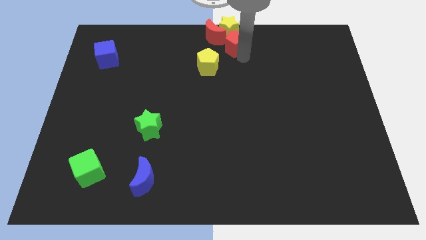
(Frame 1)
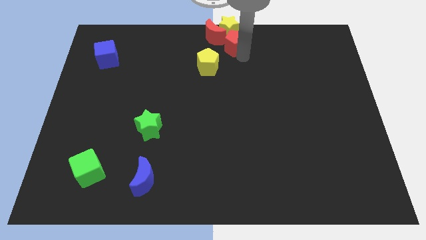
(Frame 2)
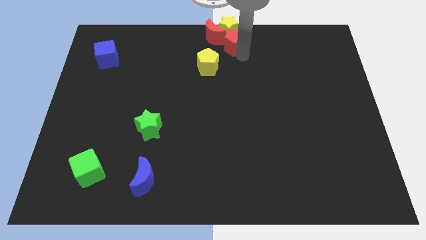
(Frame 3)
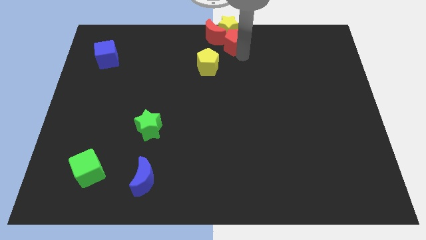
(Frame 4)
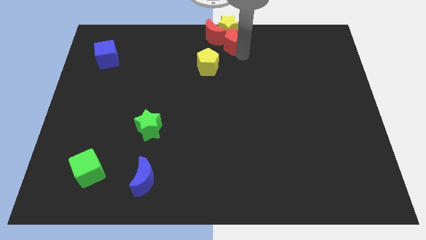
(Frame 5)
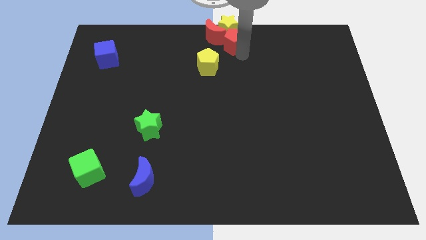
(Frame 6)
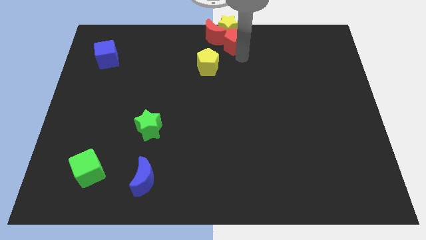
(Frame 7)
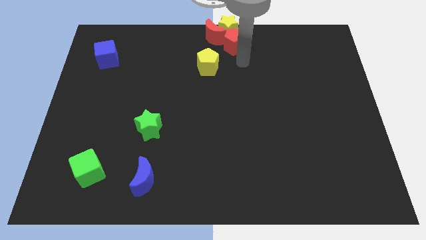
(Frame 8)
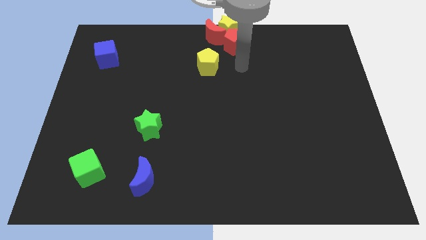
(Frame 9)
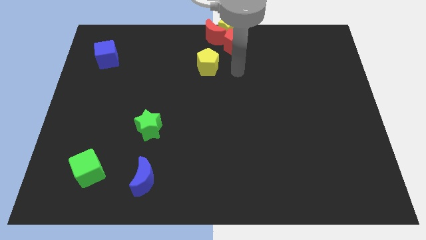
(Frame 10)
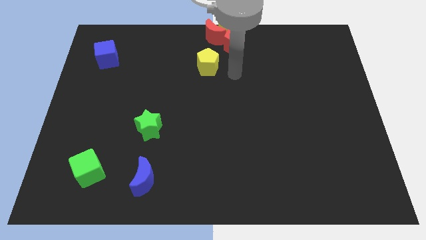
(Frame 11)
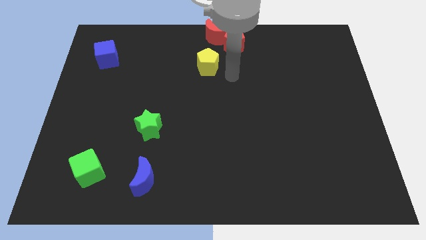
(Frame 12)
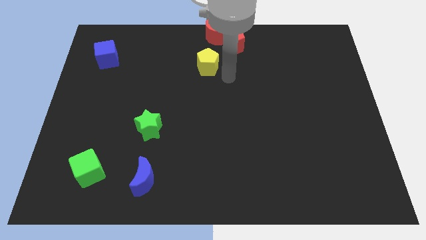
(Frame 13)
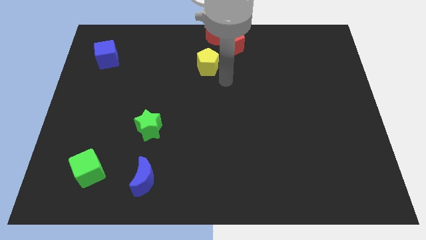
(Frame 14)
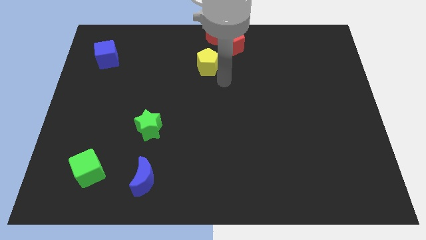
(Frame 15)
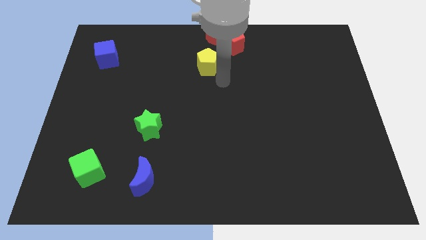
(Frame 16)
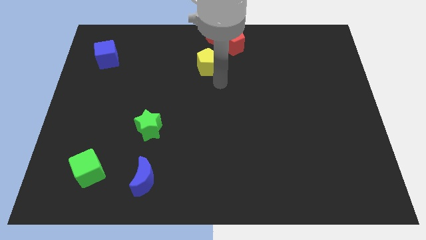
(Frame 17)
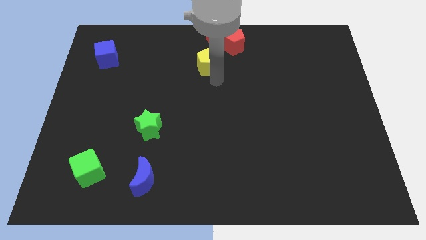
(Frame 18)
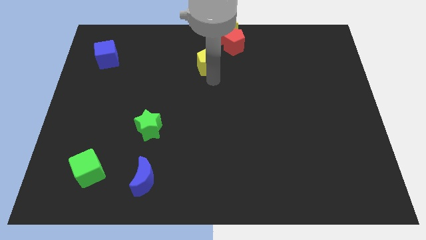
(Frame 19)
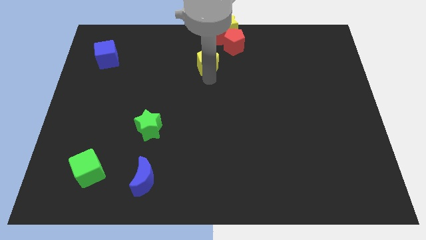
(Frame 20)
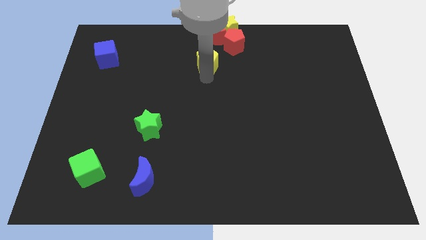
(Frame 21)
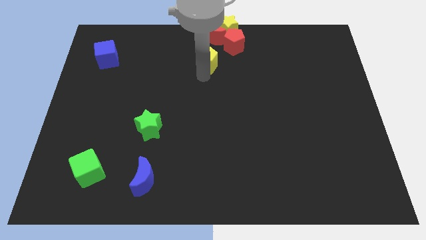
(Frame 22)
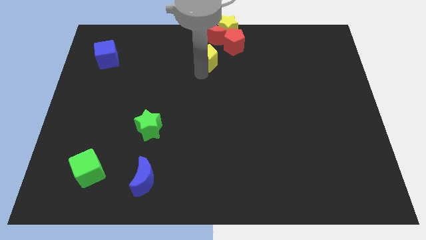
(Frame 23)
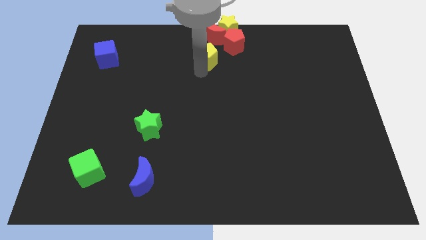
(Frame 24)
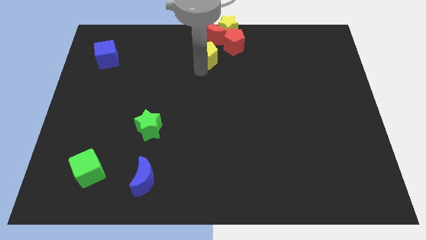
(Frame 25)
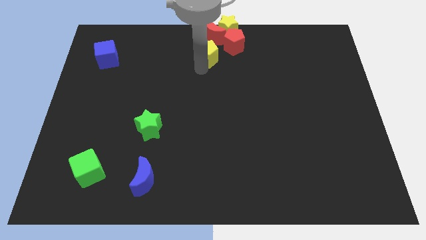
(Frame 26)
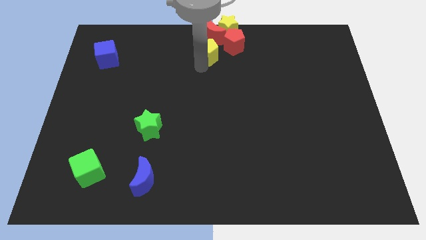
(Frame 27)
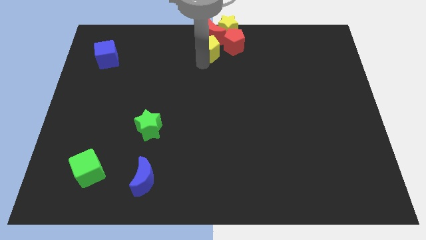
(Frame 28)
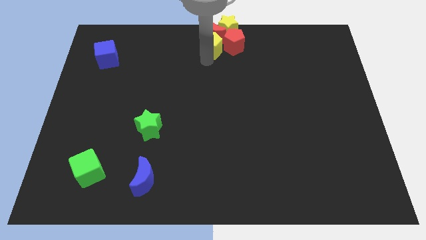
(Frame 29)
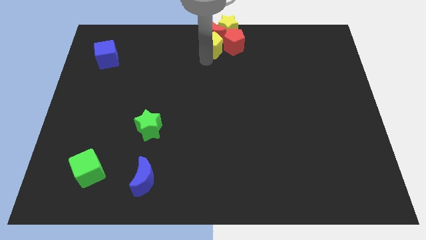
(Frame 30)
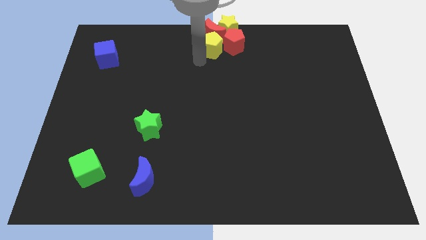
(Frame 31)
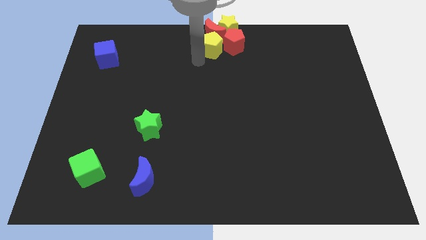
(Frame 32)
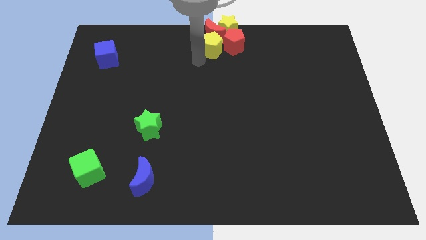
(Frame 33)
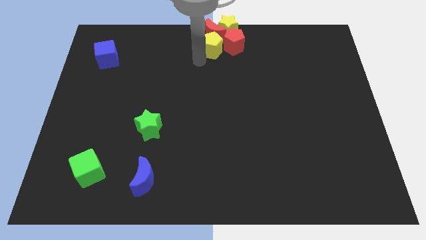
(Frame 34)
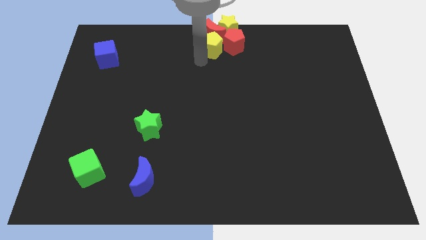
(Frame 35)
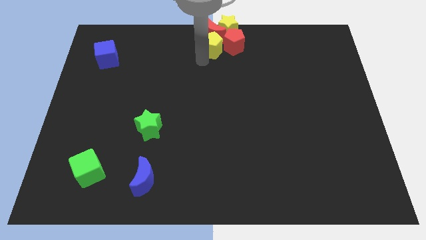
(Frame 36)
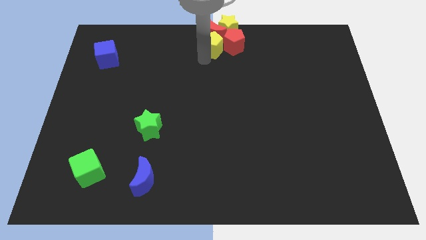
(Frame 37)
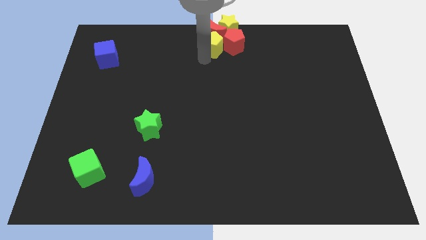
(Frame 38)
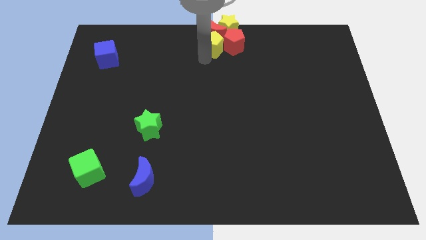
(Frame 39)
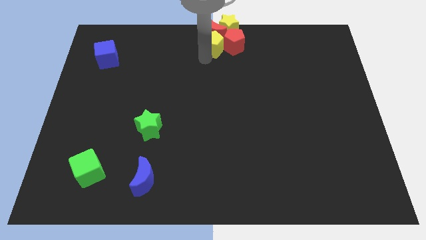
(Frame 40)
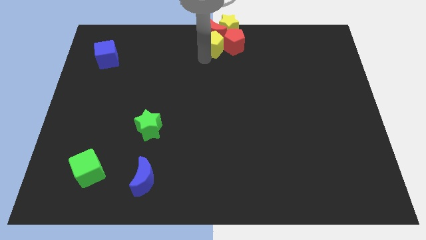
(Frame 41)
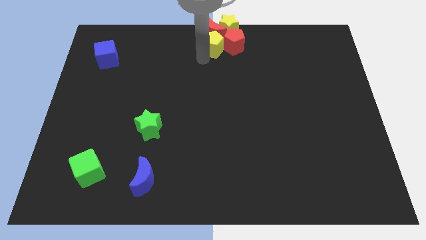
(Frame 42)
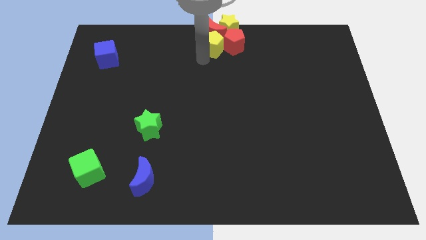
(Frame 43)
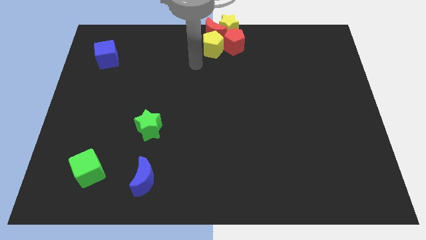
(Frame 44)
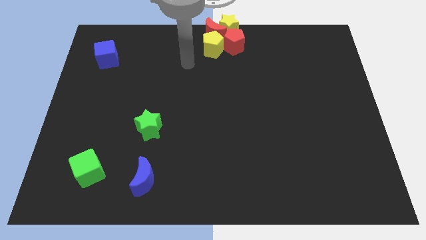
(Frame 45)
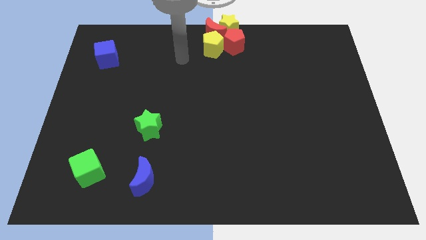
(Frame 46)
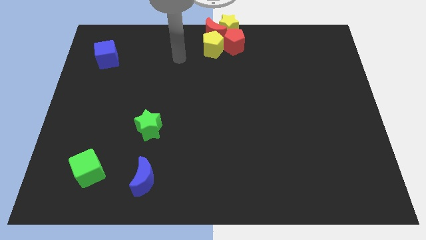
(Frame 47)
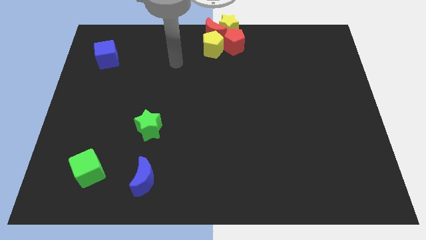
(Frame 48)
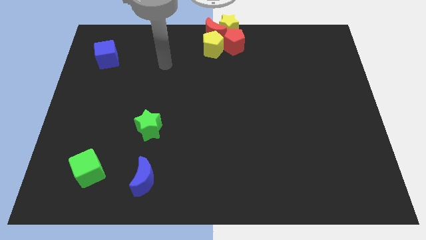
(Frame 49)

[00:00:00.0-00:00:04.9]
place the yellow pentagon at the top center

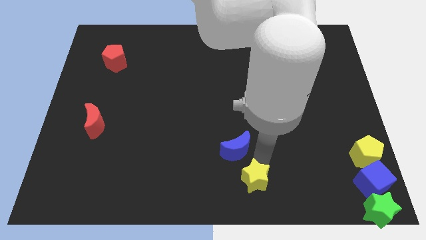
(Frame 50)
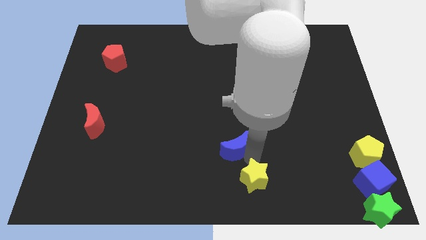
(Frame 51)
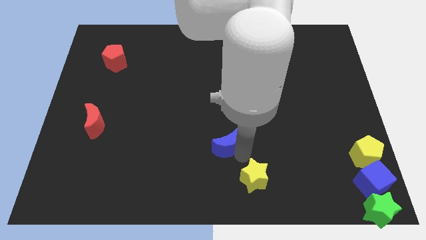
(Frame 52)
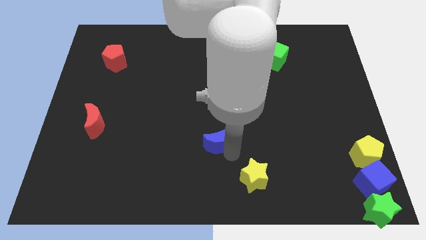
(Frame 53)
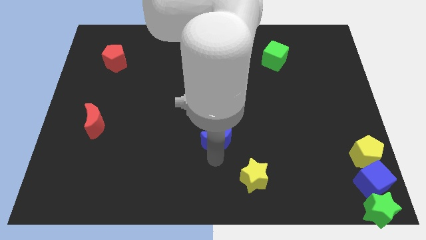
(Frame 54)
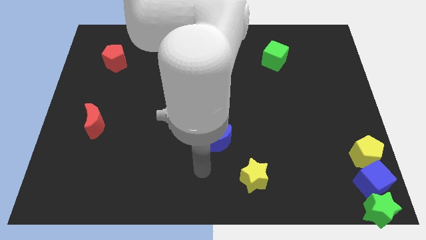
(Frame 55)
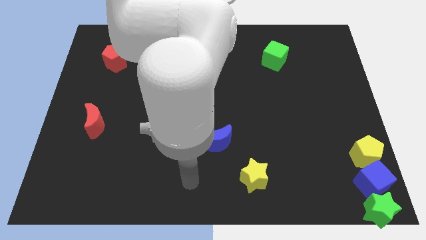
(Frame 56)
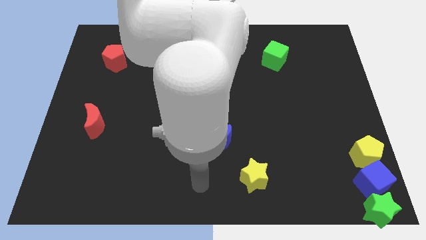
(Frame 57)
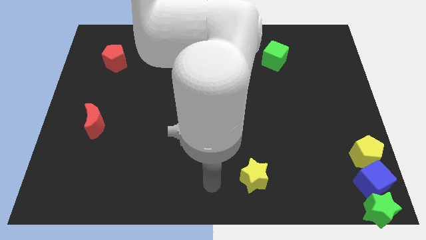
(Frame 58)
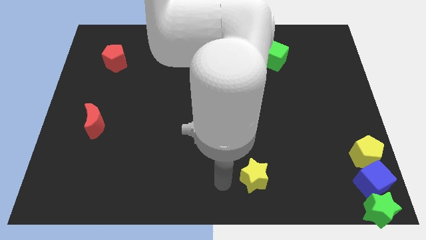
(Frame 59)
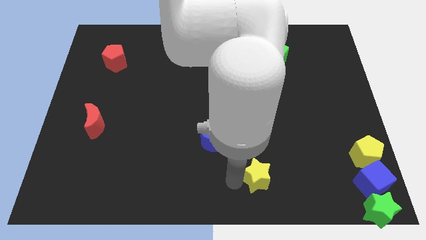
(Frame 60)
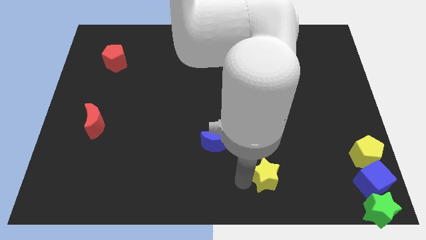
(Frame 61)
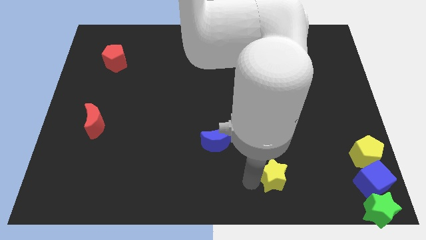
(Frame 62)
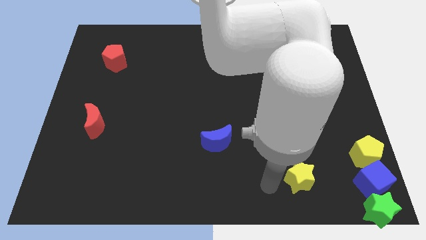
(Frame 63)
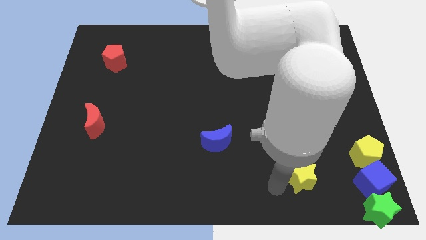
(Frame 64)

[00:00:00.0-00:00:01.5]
push the yellow star slightly to the right side of the board

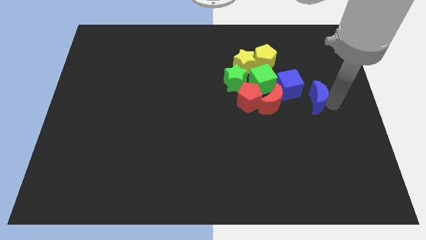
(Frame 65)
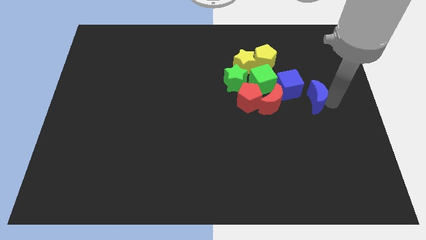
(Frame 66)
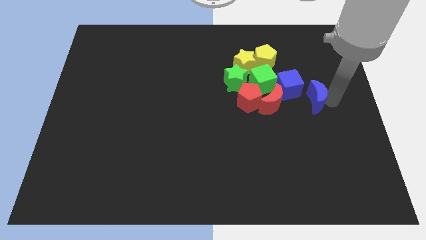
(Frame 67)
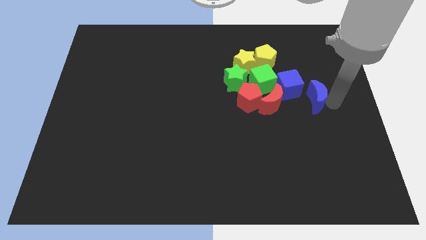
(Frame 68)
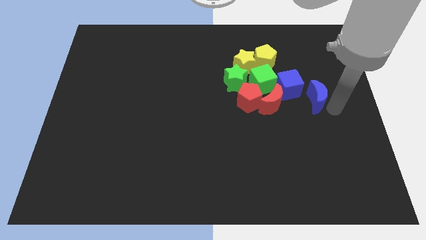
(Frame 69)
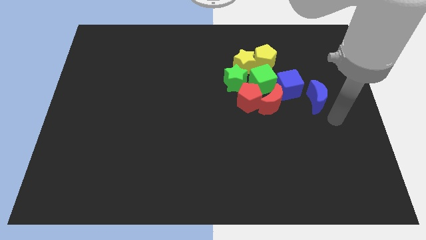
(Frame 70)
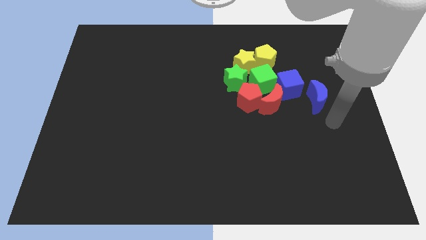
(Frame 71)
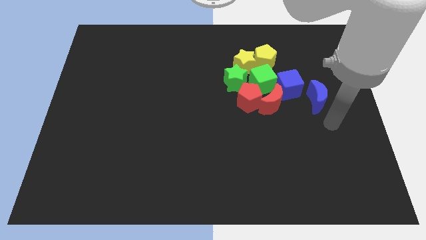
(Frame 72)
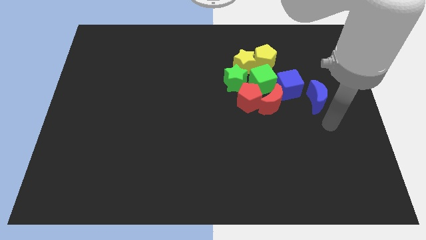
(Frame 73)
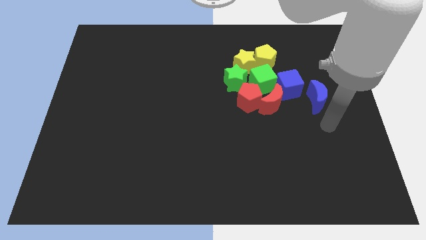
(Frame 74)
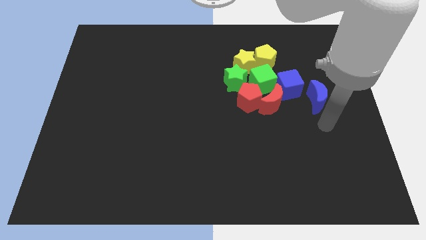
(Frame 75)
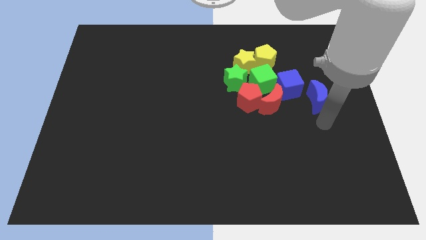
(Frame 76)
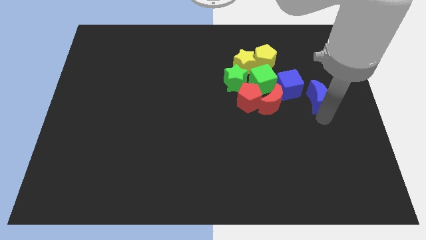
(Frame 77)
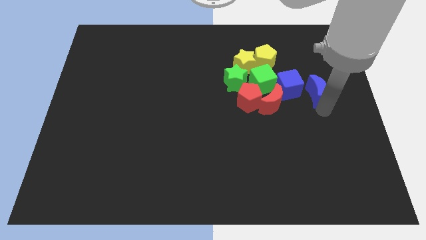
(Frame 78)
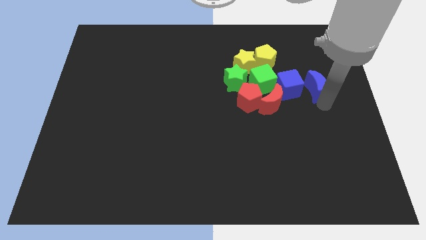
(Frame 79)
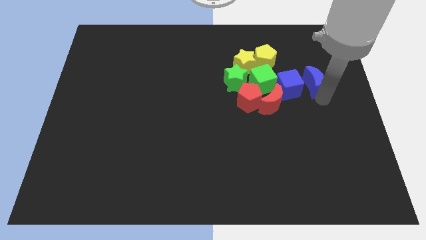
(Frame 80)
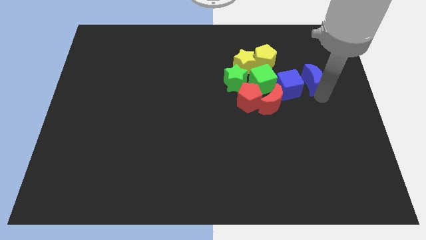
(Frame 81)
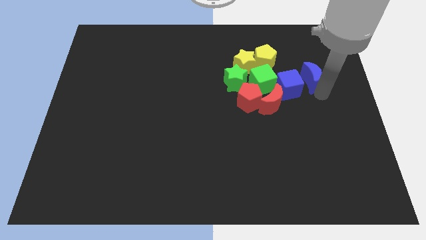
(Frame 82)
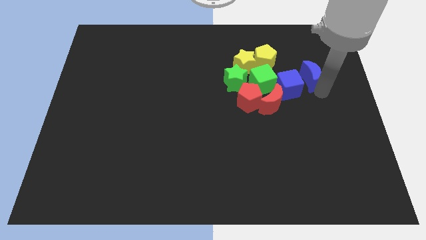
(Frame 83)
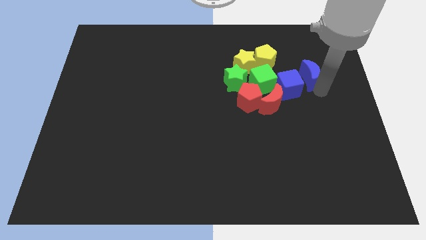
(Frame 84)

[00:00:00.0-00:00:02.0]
move blue crescent close to the blue cube

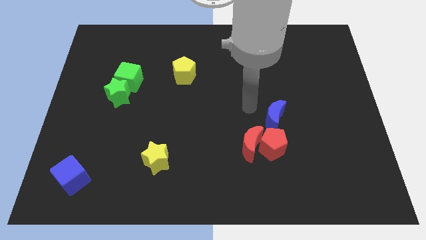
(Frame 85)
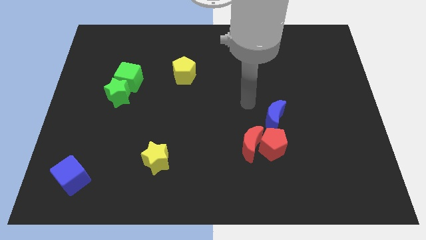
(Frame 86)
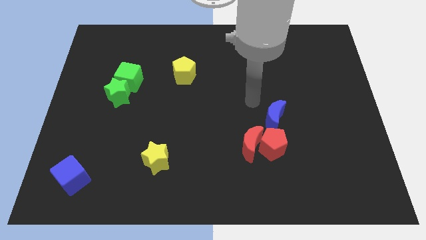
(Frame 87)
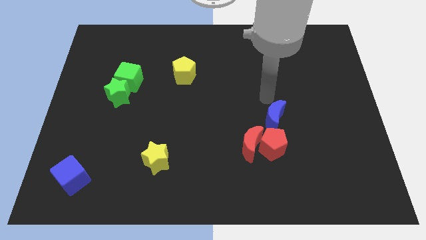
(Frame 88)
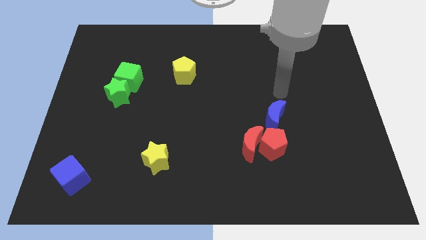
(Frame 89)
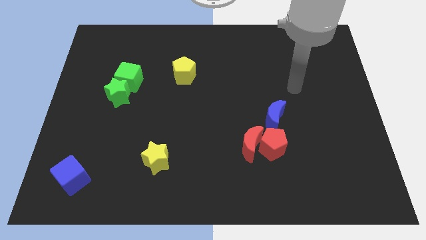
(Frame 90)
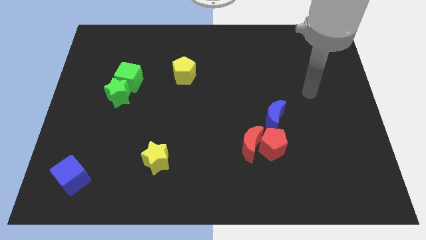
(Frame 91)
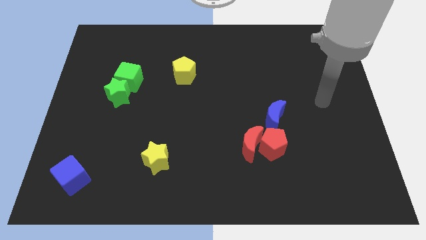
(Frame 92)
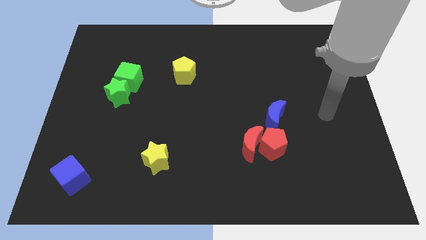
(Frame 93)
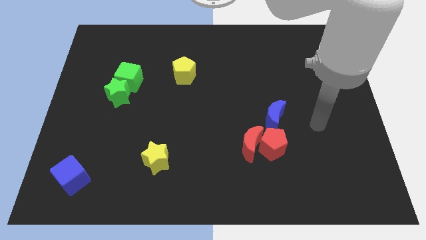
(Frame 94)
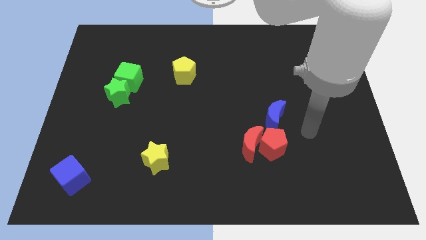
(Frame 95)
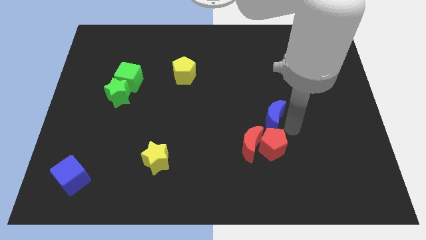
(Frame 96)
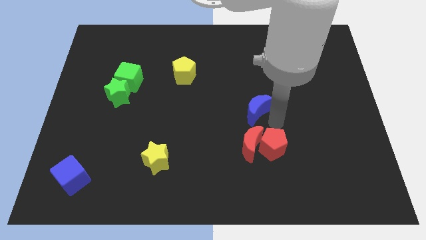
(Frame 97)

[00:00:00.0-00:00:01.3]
slightly move the blue moon to the left
